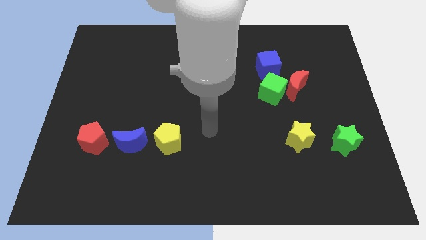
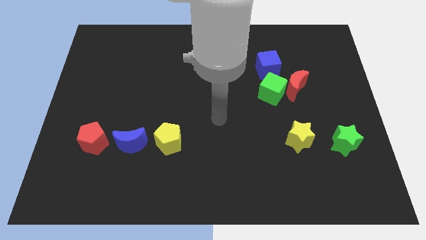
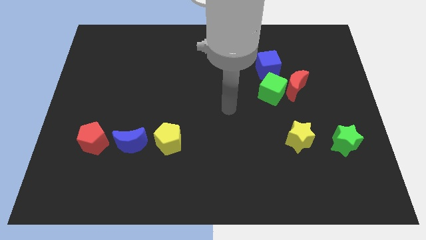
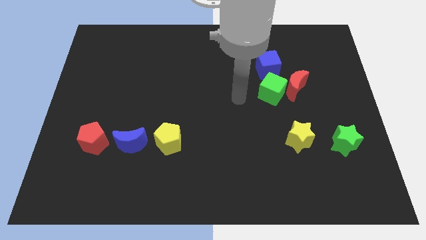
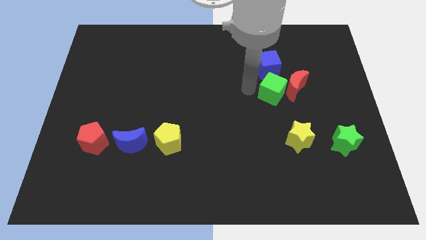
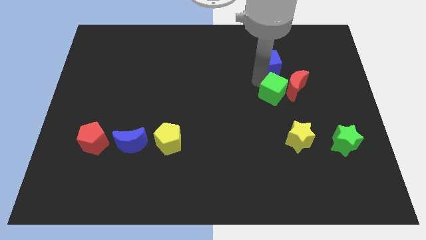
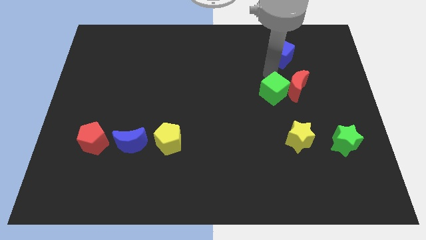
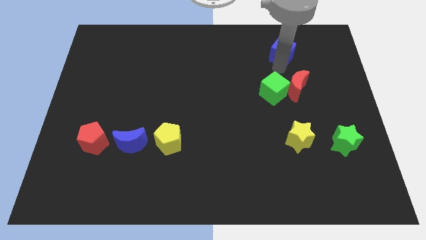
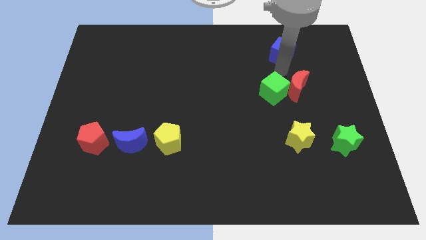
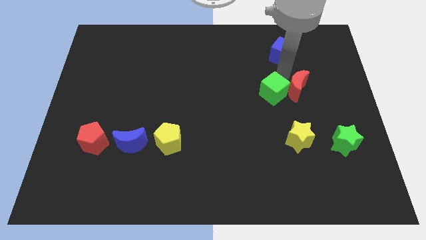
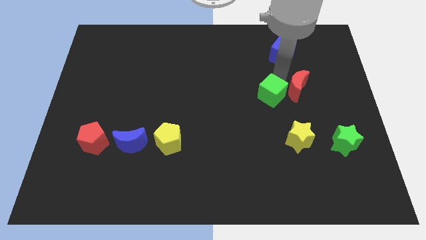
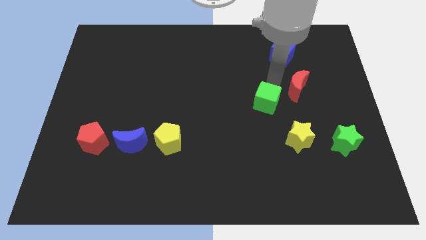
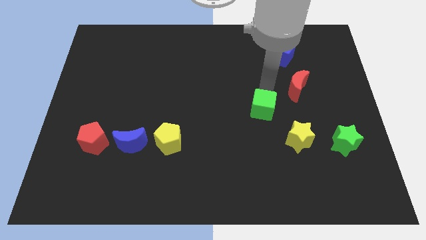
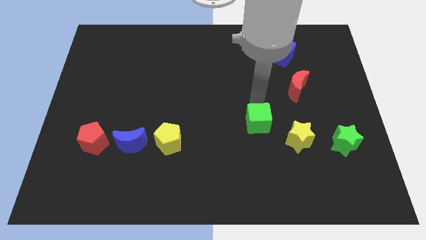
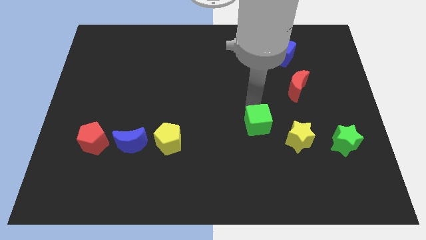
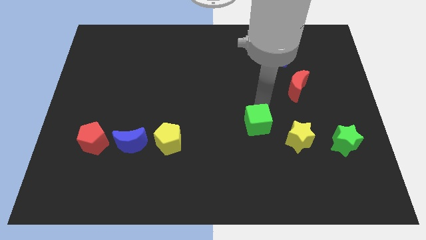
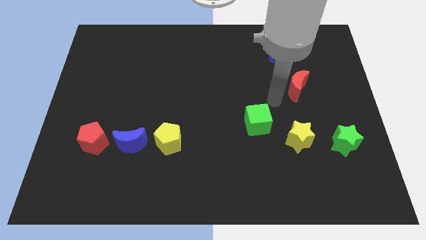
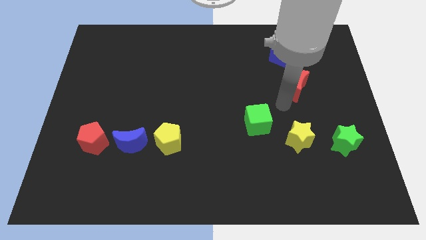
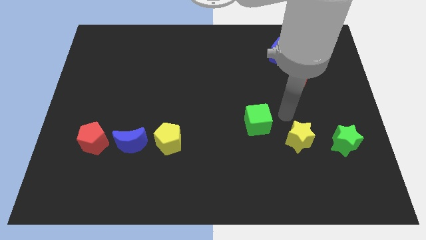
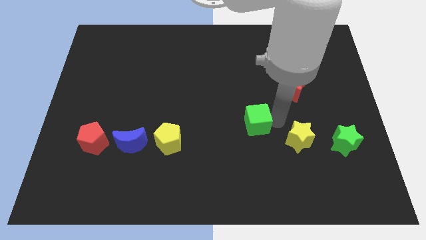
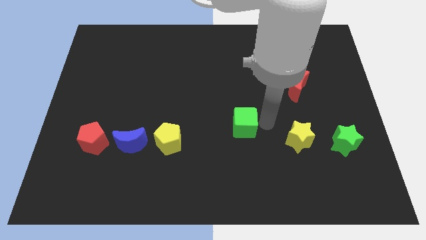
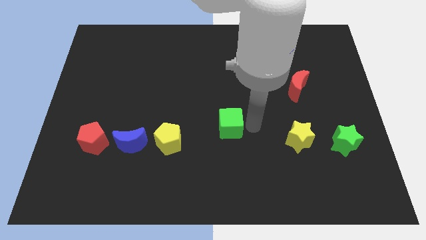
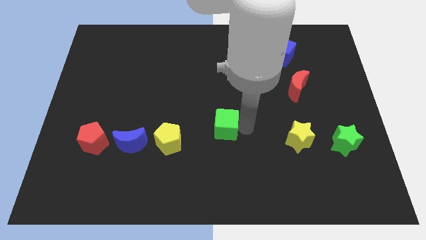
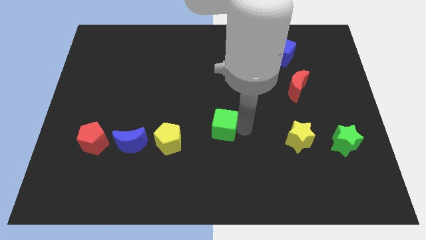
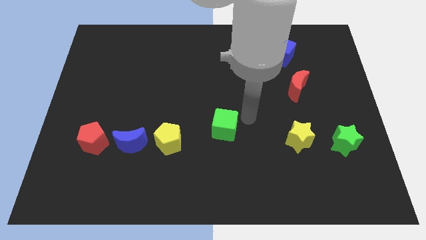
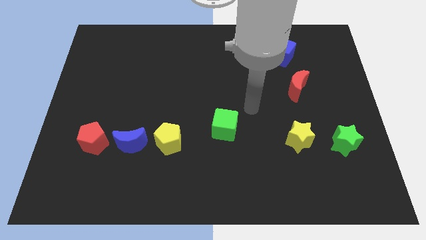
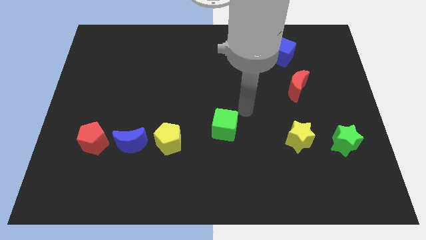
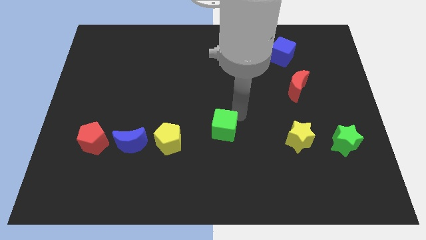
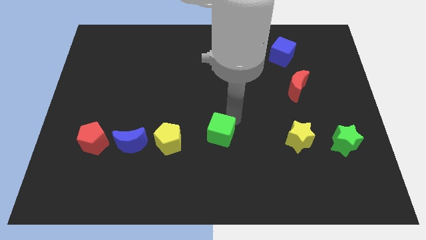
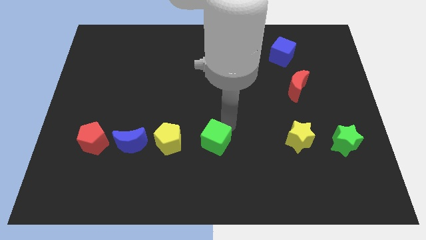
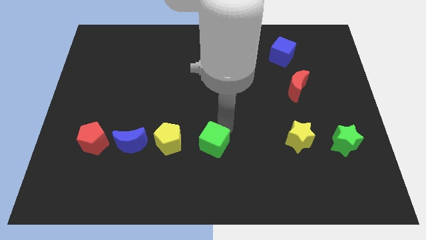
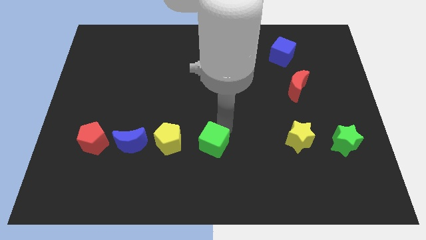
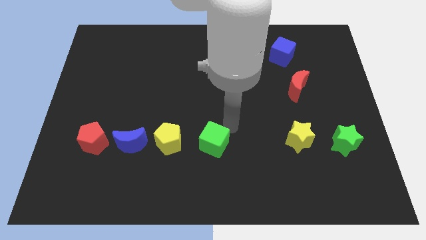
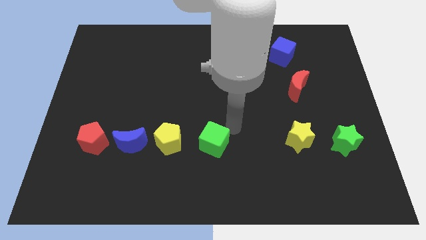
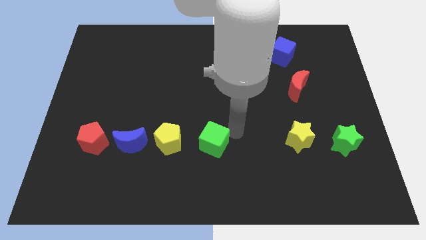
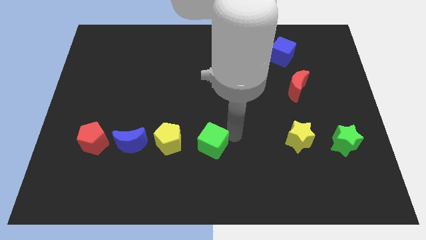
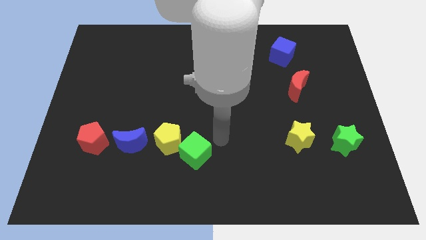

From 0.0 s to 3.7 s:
place the green cube to the right of the yellow pentagon

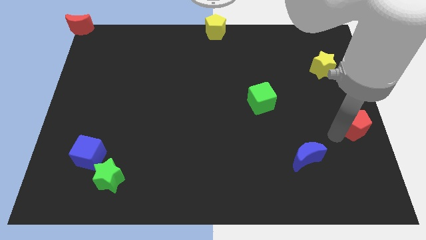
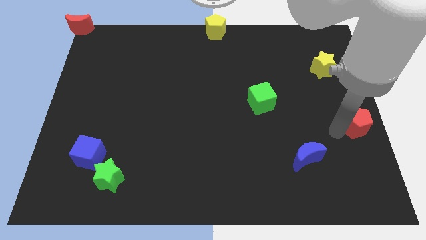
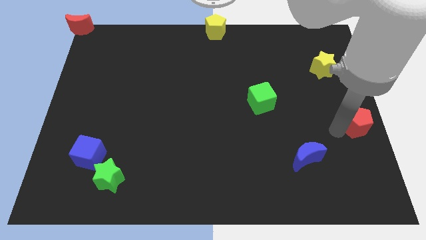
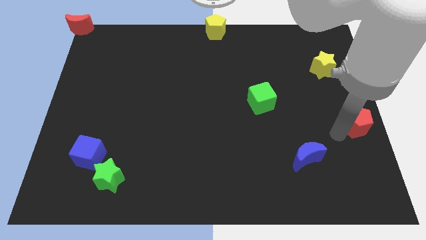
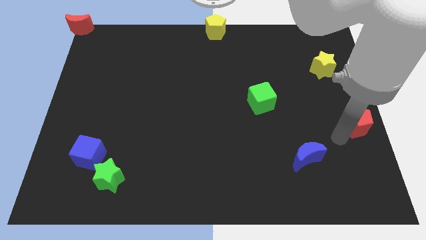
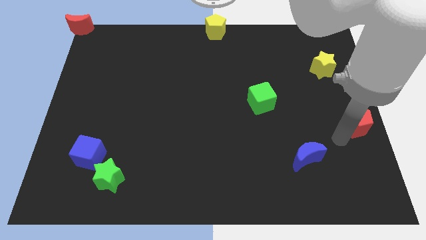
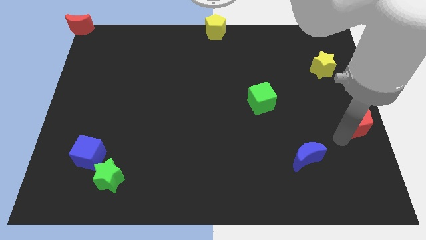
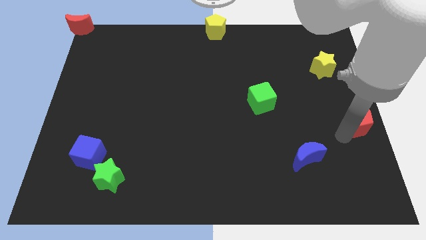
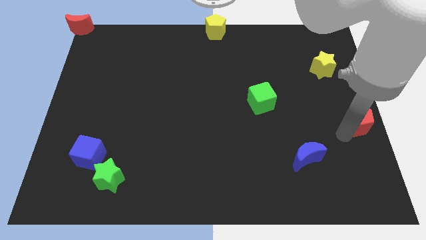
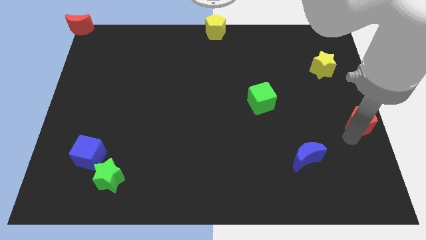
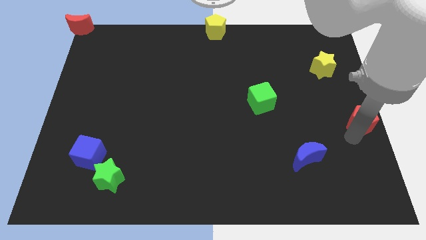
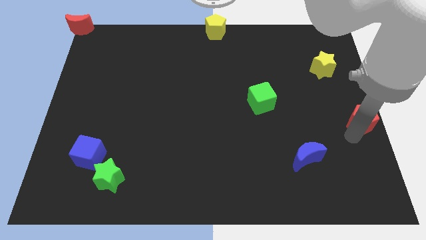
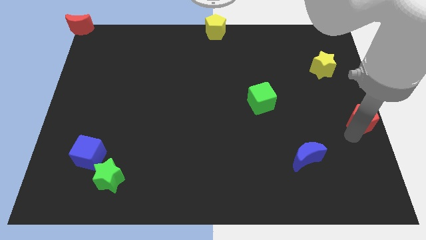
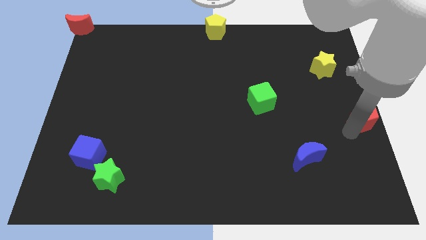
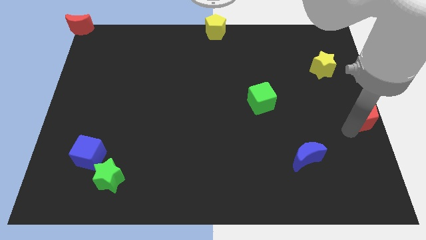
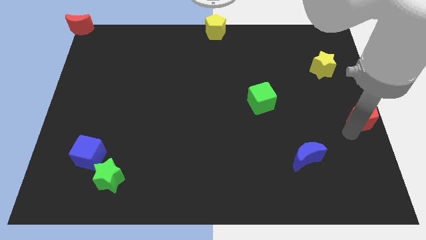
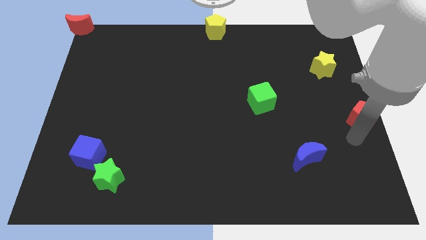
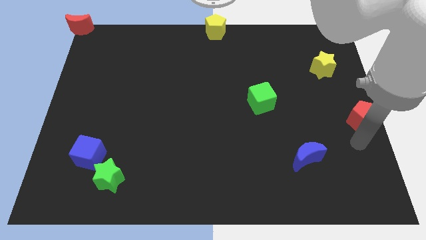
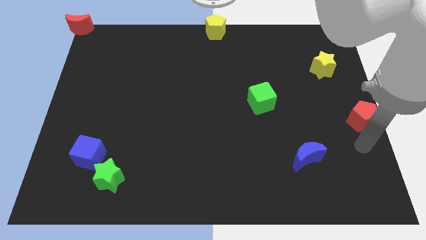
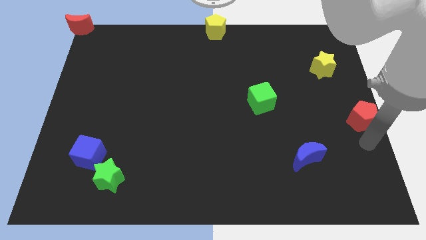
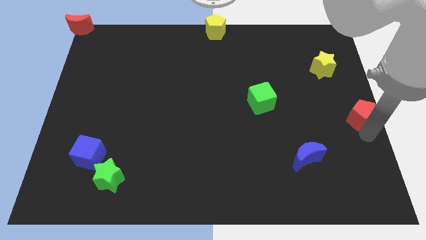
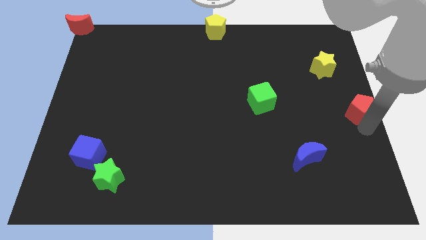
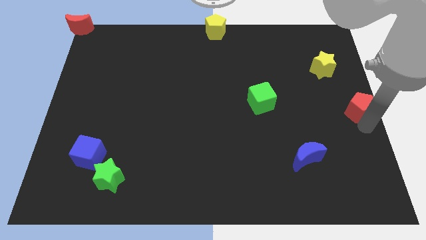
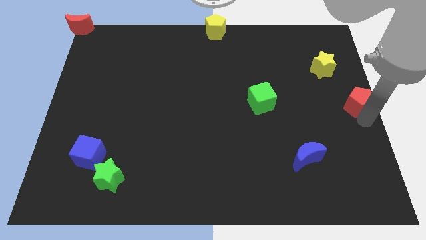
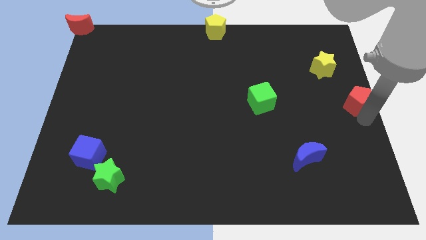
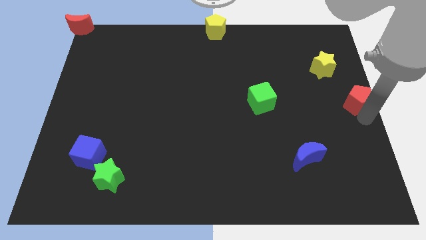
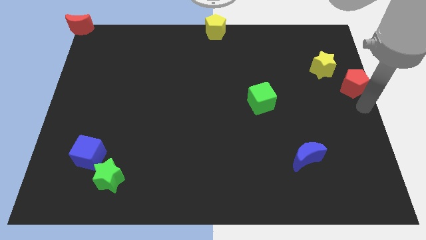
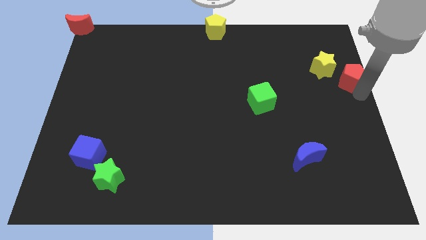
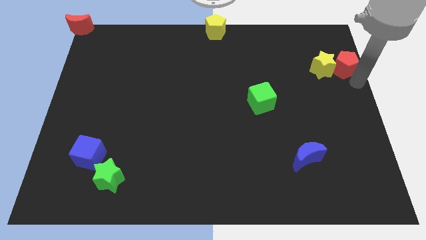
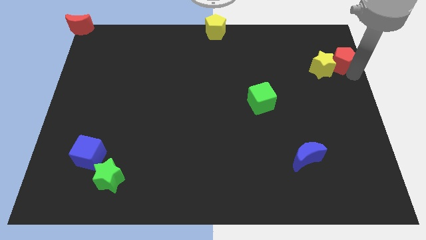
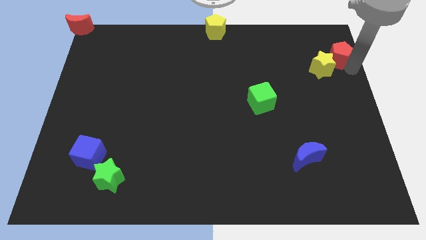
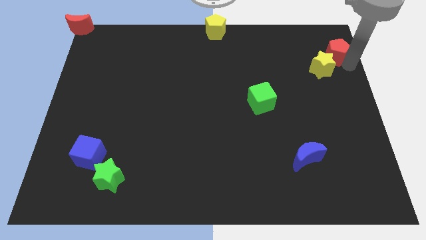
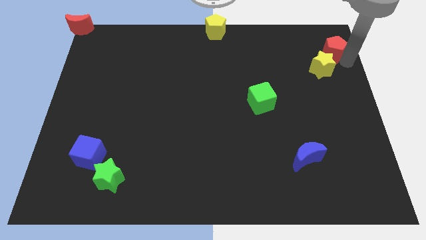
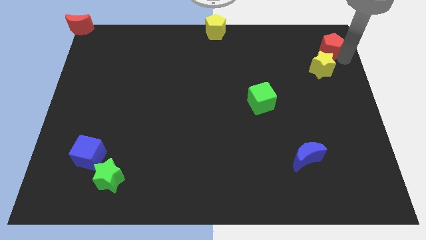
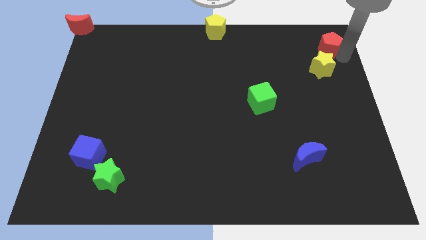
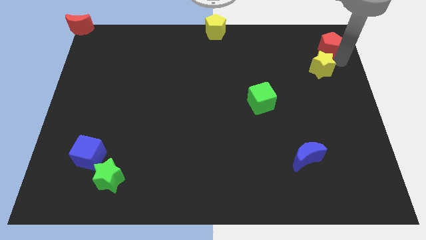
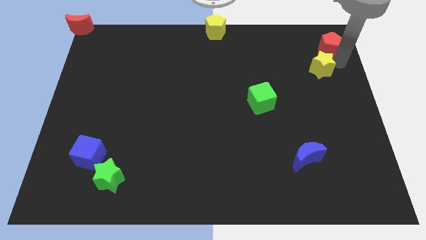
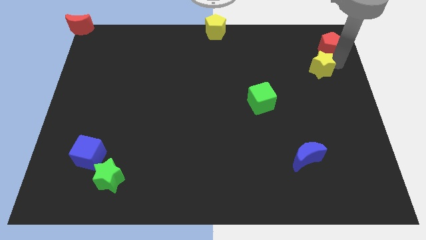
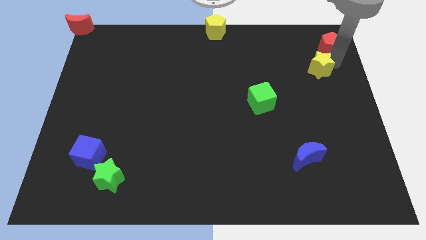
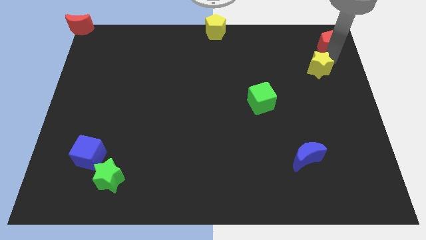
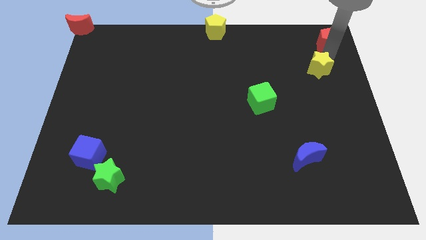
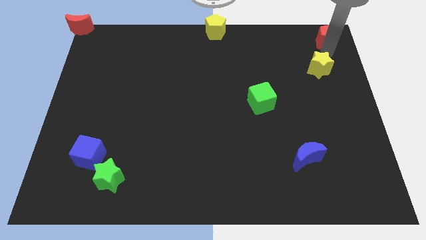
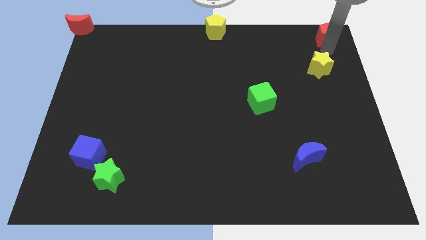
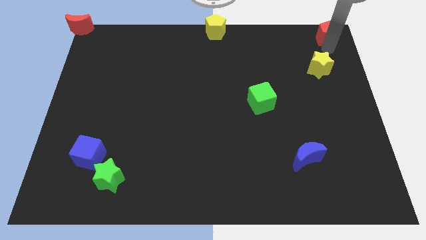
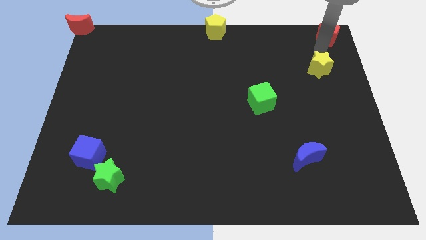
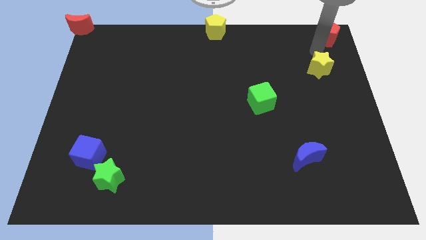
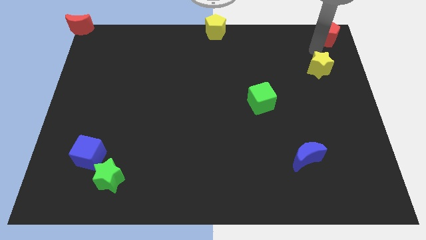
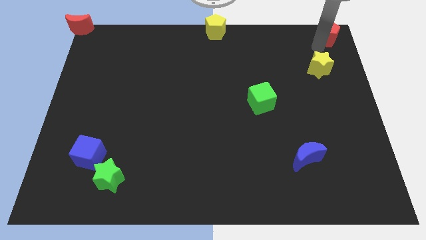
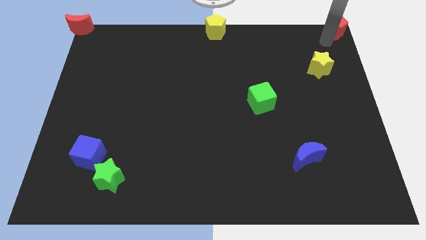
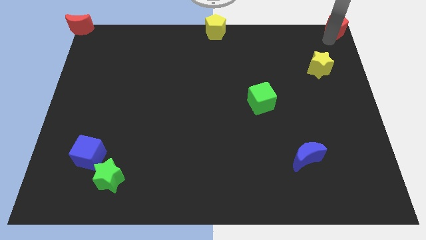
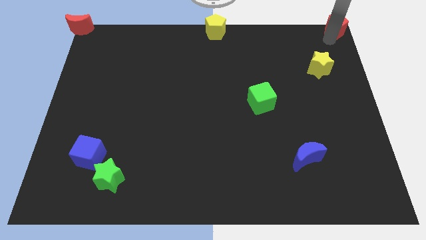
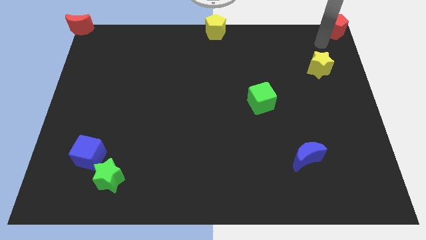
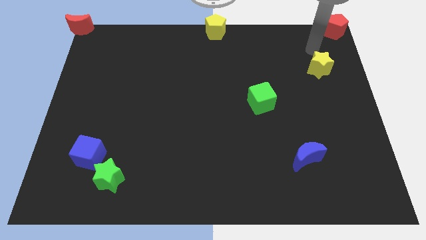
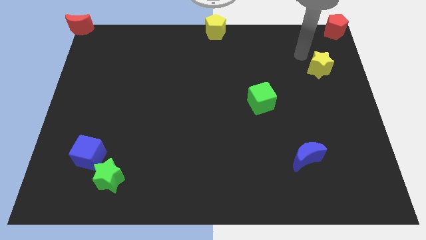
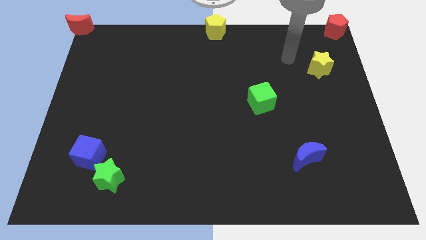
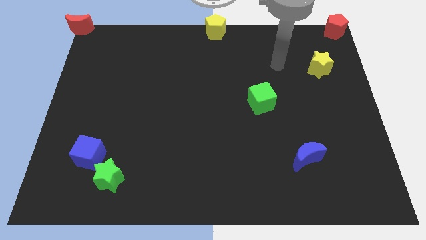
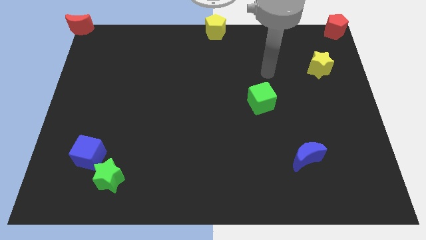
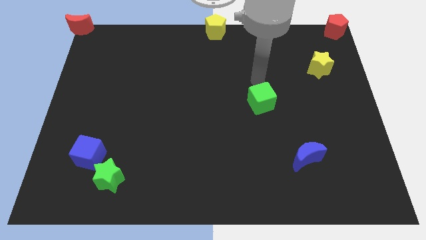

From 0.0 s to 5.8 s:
move red pentagon to the top right corner of the board
